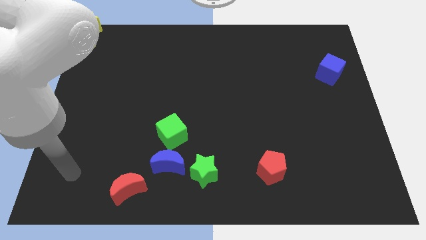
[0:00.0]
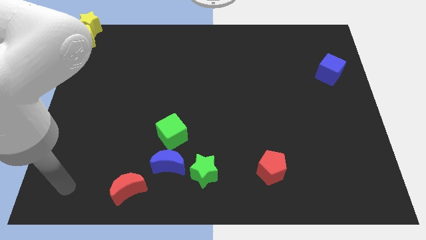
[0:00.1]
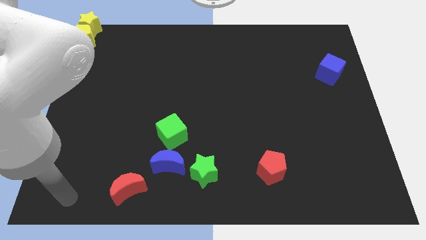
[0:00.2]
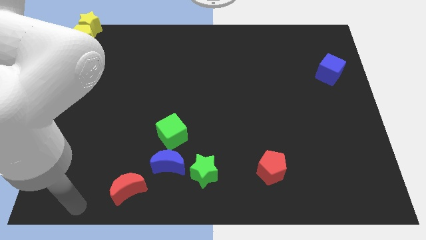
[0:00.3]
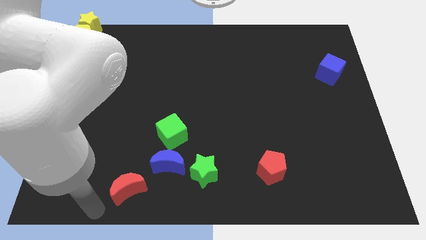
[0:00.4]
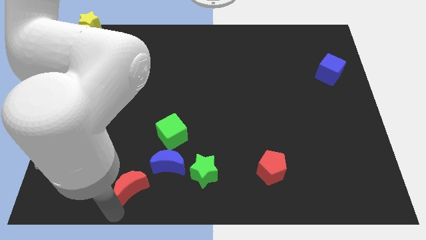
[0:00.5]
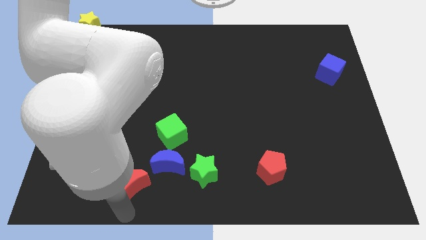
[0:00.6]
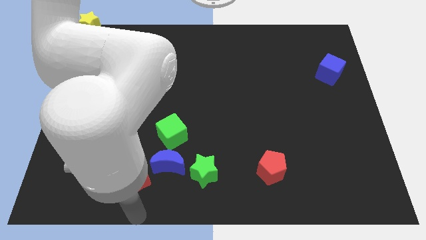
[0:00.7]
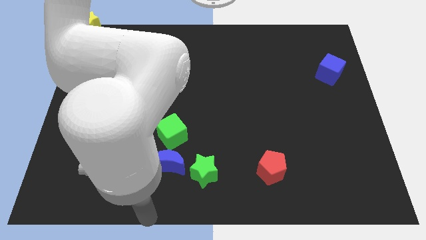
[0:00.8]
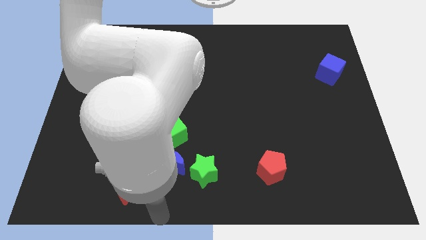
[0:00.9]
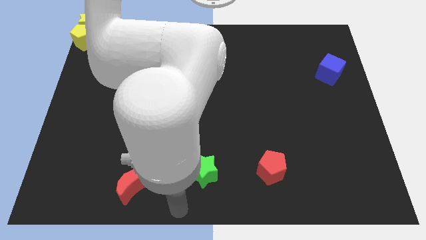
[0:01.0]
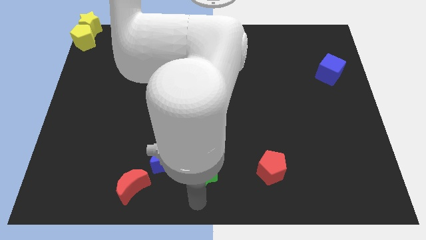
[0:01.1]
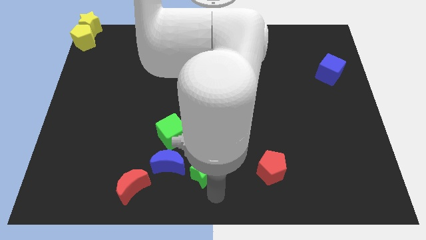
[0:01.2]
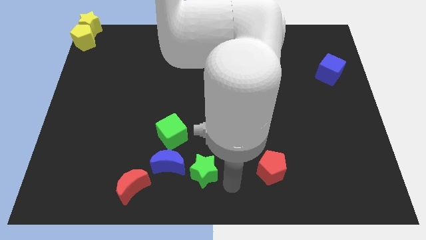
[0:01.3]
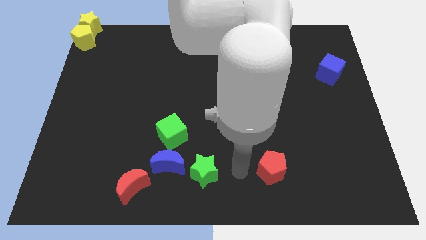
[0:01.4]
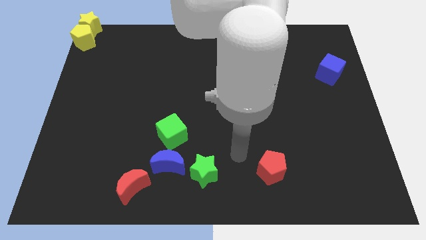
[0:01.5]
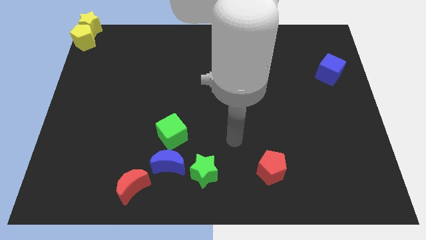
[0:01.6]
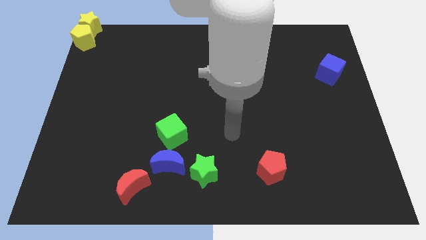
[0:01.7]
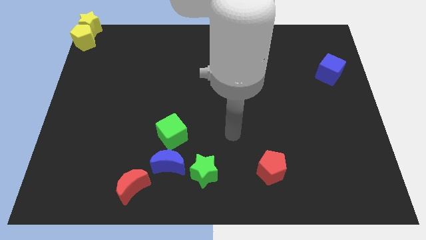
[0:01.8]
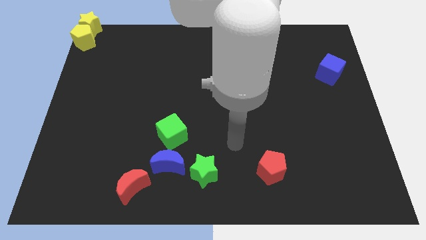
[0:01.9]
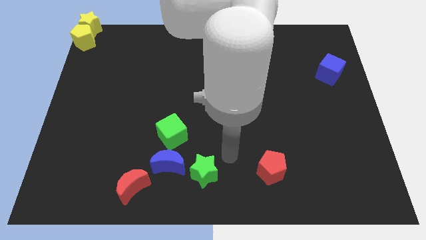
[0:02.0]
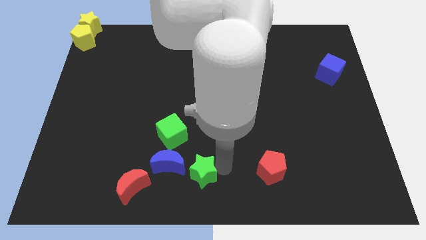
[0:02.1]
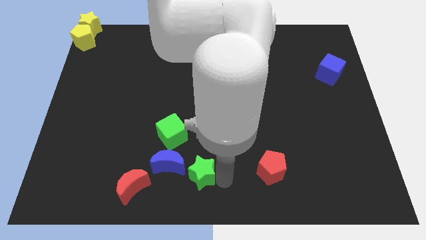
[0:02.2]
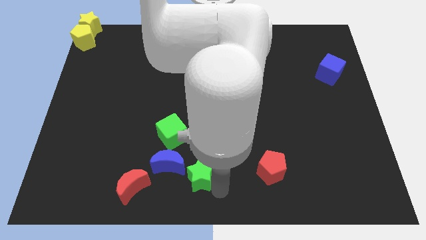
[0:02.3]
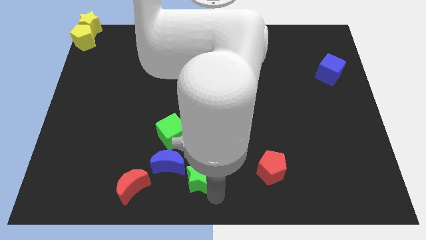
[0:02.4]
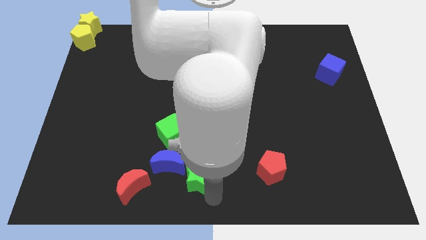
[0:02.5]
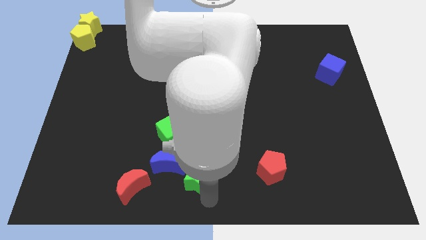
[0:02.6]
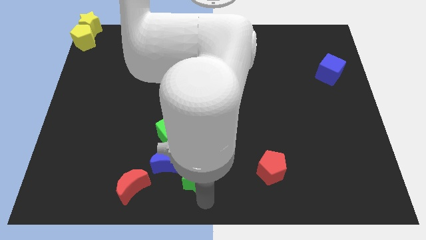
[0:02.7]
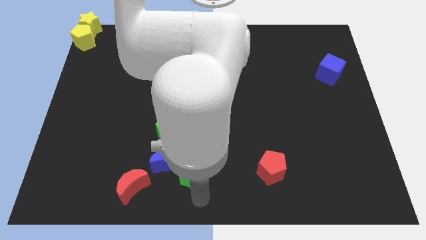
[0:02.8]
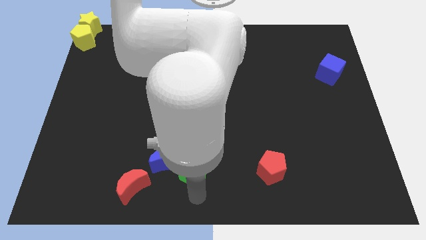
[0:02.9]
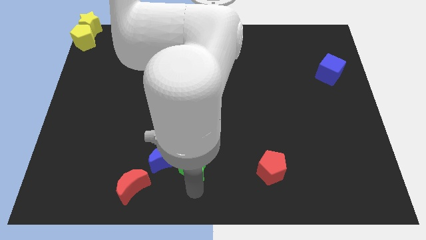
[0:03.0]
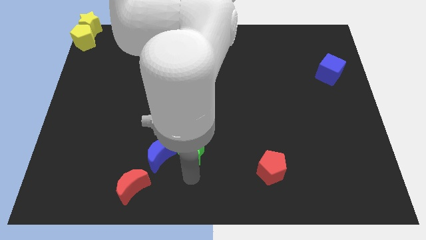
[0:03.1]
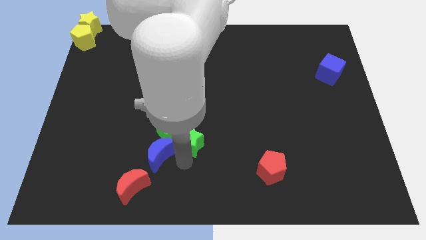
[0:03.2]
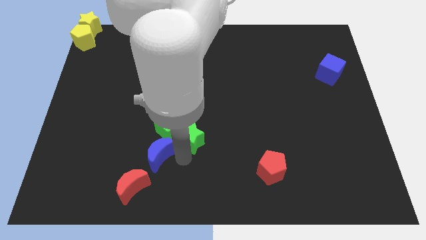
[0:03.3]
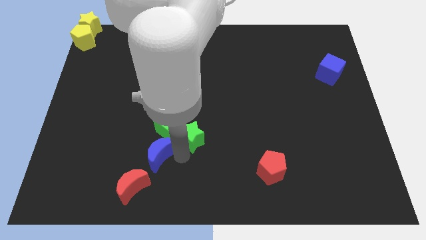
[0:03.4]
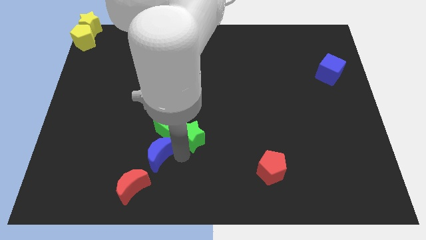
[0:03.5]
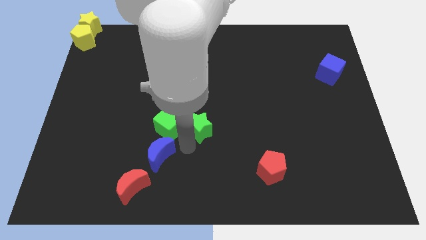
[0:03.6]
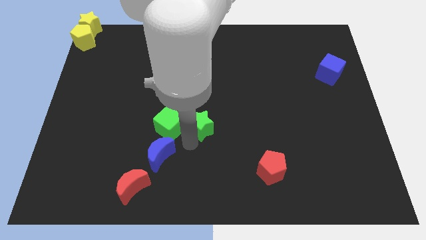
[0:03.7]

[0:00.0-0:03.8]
push a group of blocks upward

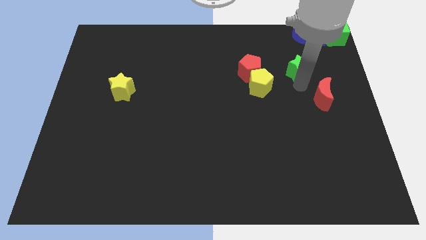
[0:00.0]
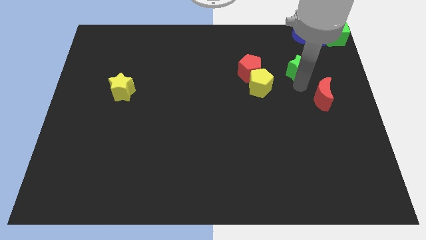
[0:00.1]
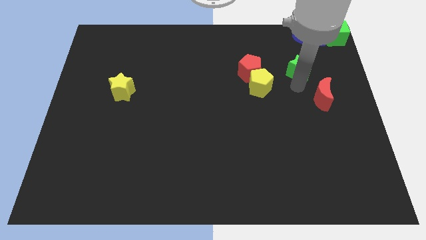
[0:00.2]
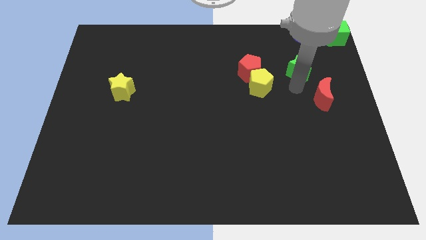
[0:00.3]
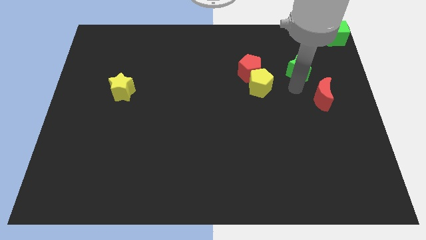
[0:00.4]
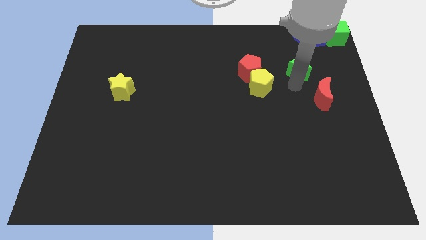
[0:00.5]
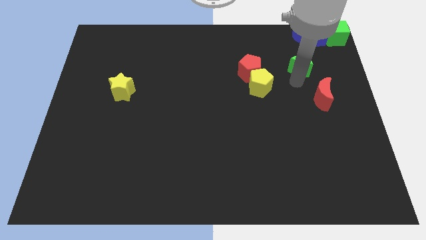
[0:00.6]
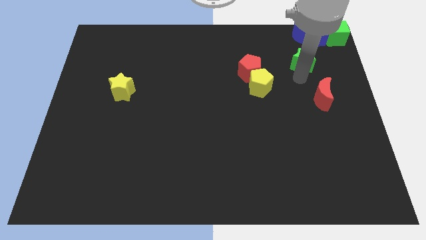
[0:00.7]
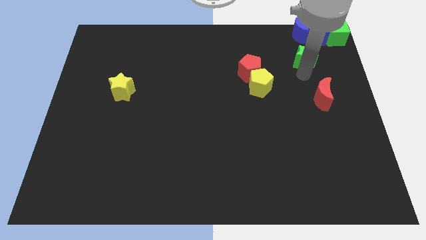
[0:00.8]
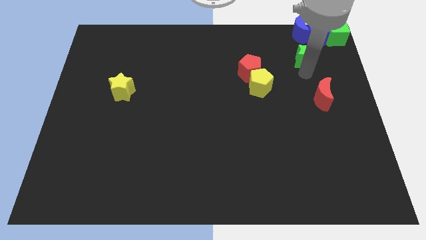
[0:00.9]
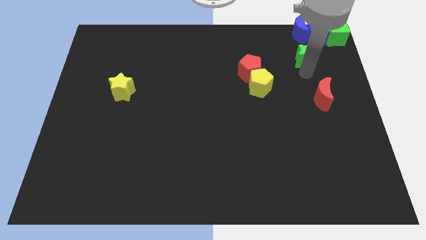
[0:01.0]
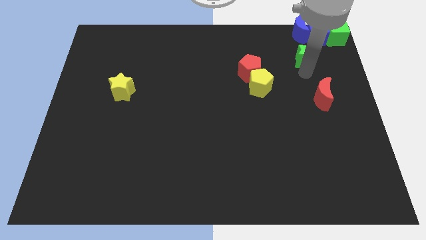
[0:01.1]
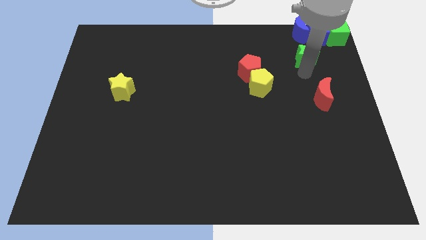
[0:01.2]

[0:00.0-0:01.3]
put the green star below the blue moon

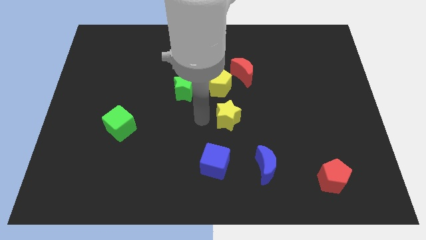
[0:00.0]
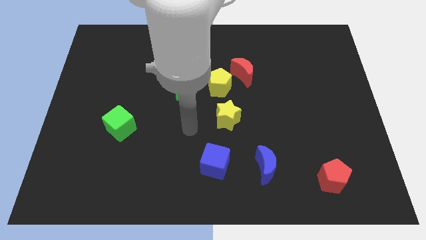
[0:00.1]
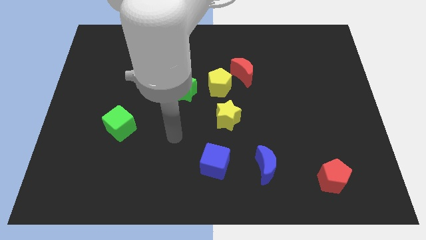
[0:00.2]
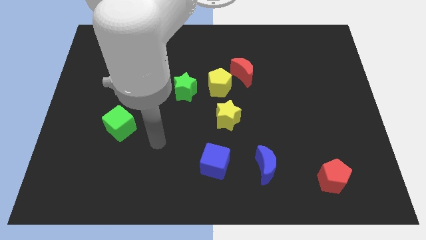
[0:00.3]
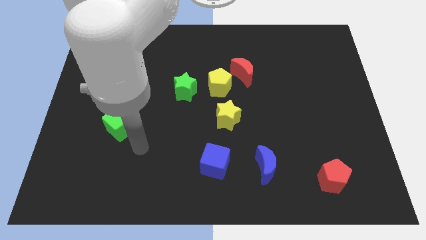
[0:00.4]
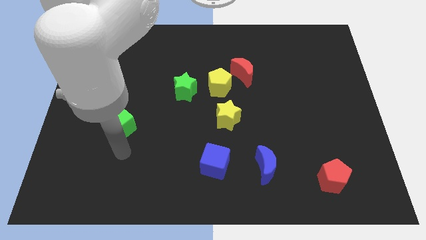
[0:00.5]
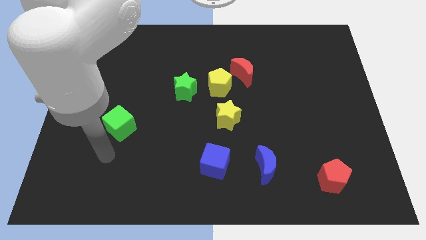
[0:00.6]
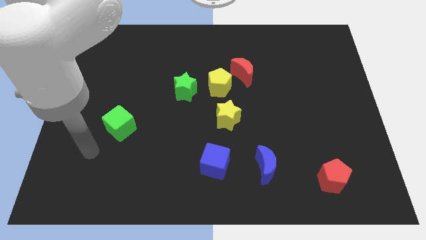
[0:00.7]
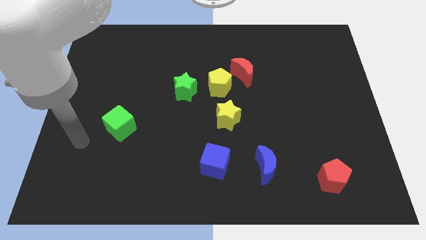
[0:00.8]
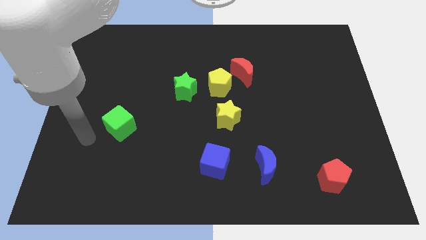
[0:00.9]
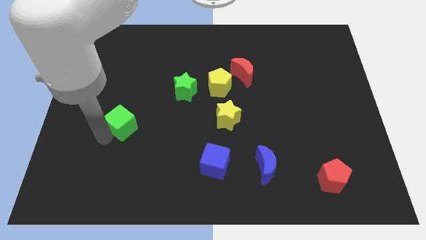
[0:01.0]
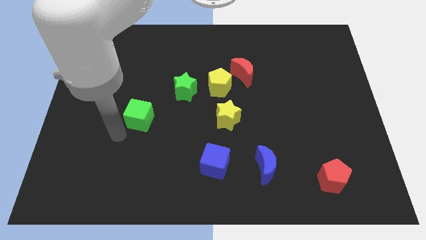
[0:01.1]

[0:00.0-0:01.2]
move the arm to the left of the green cube

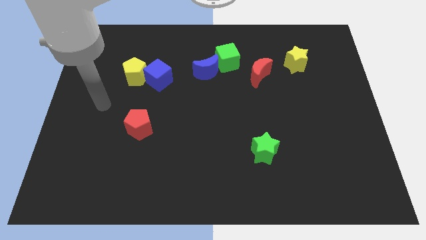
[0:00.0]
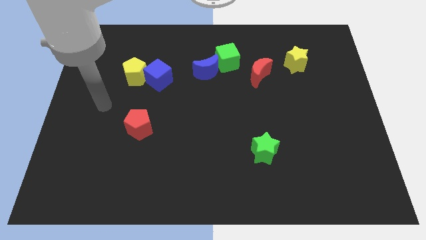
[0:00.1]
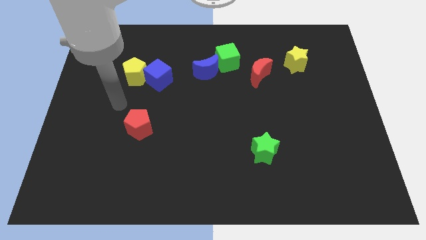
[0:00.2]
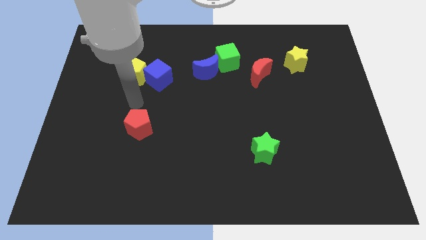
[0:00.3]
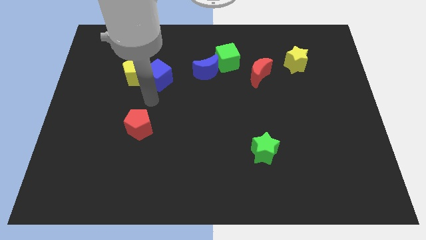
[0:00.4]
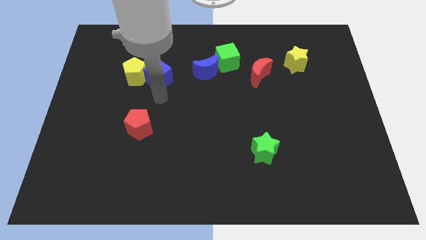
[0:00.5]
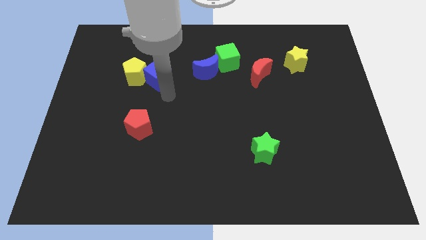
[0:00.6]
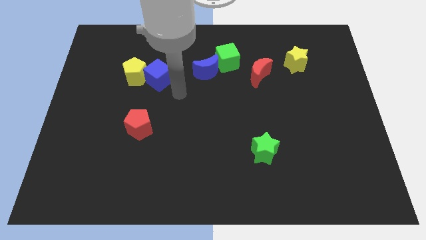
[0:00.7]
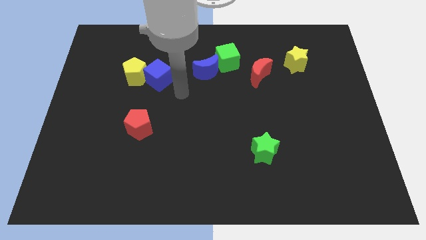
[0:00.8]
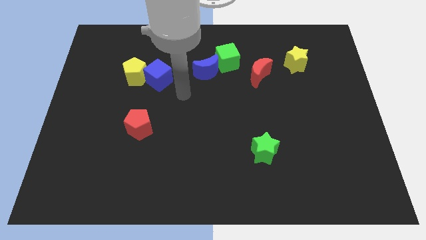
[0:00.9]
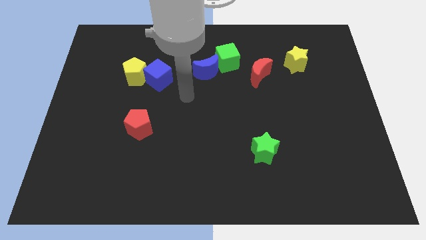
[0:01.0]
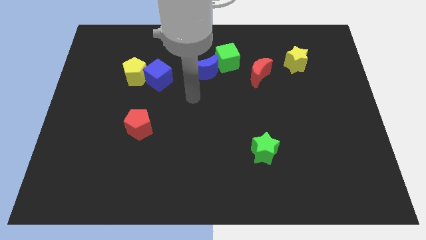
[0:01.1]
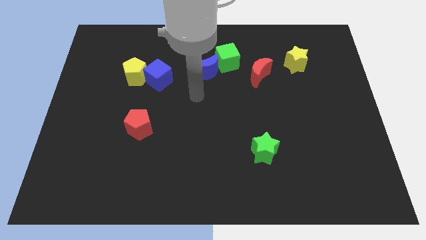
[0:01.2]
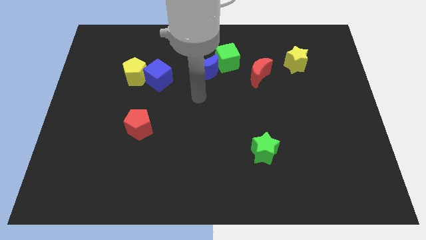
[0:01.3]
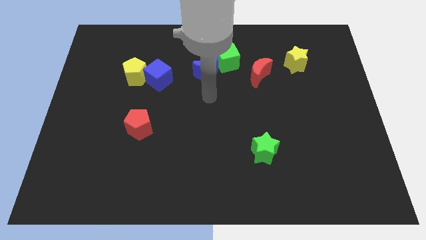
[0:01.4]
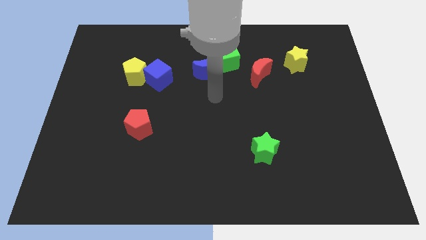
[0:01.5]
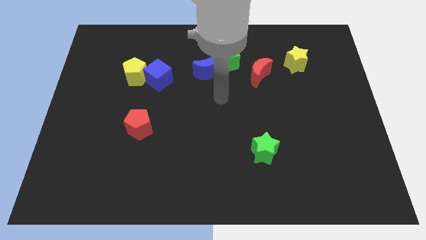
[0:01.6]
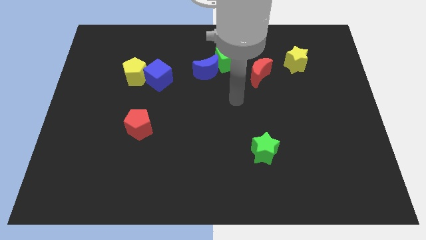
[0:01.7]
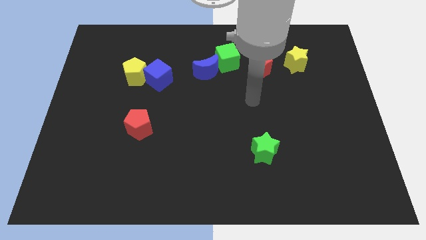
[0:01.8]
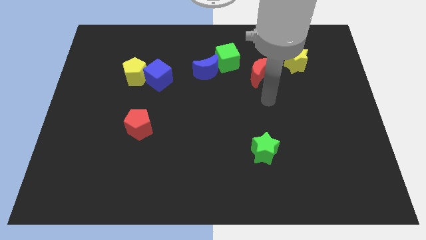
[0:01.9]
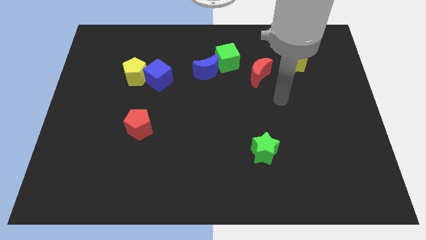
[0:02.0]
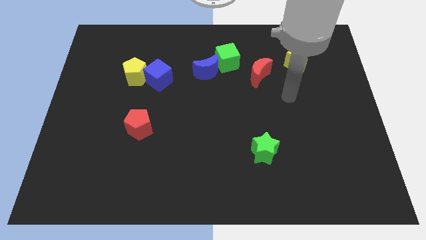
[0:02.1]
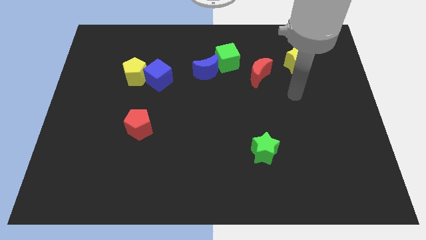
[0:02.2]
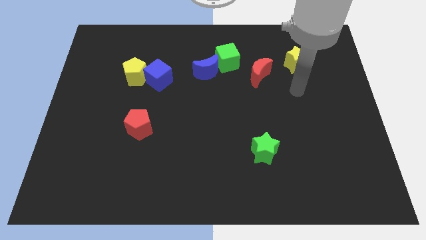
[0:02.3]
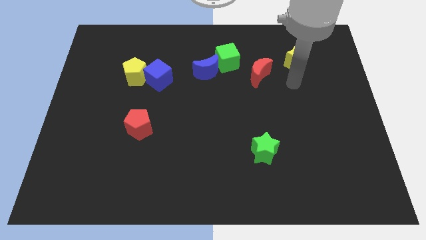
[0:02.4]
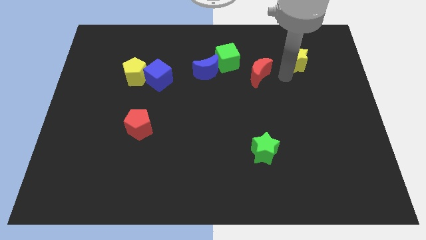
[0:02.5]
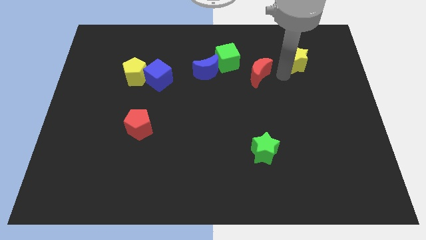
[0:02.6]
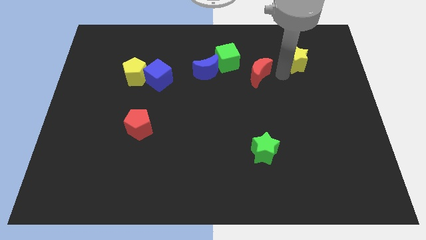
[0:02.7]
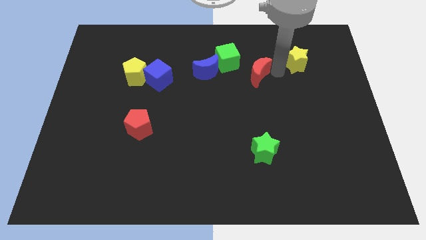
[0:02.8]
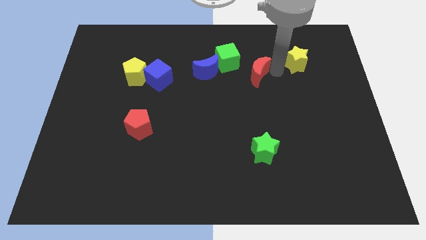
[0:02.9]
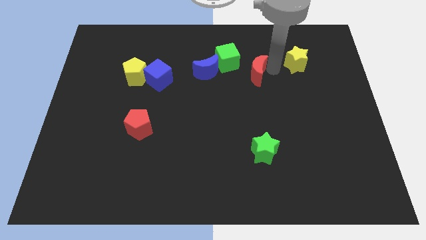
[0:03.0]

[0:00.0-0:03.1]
tap your hand to the top right side of red moon
